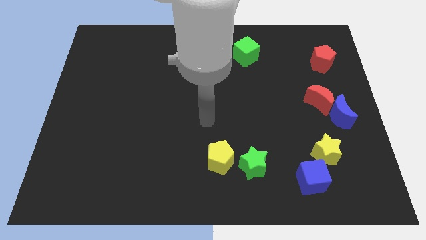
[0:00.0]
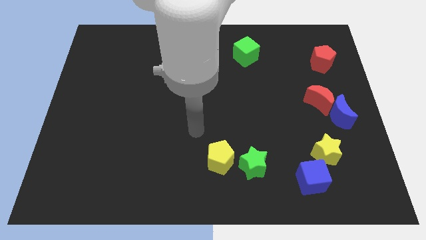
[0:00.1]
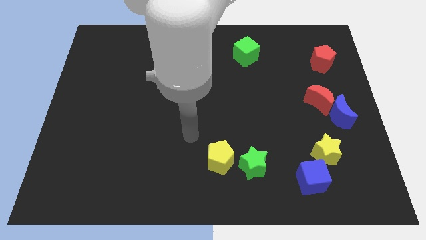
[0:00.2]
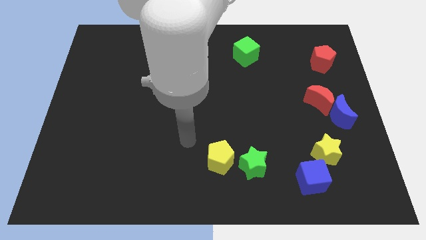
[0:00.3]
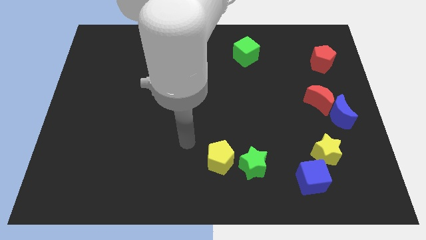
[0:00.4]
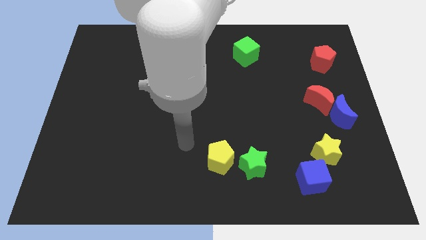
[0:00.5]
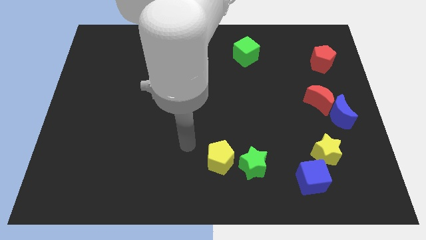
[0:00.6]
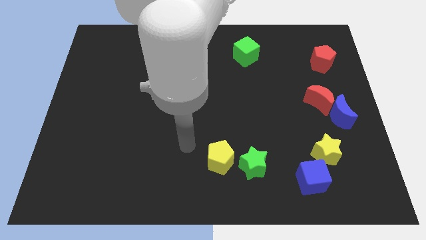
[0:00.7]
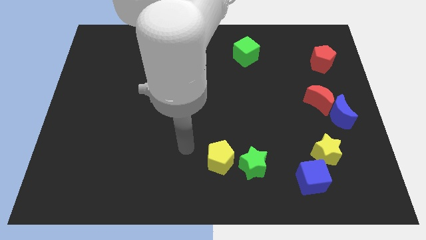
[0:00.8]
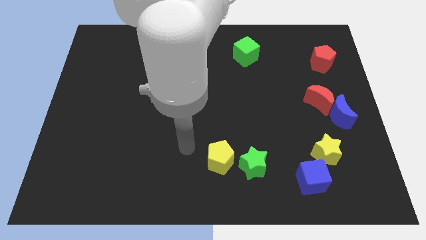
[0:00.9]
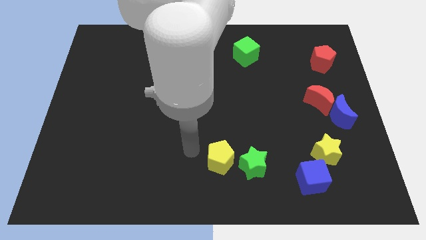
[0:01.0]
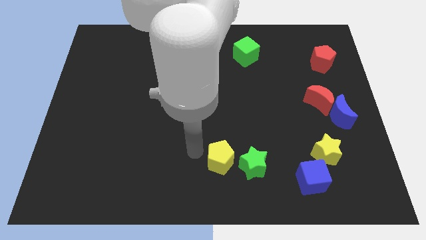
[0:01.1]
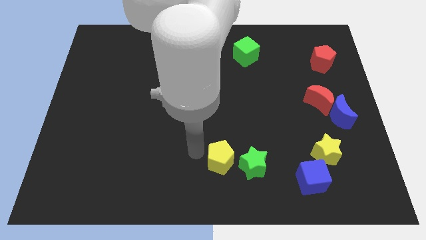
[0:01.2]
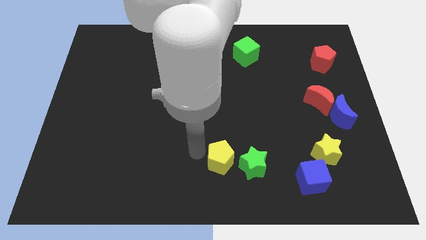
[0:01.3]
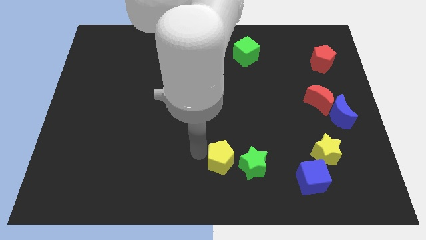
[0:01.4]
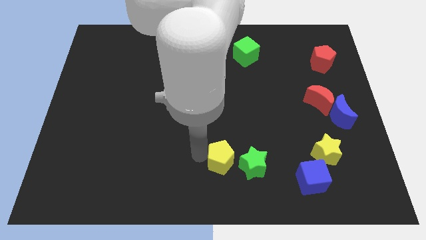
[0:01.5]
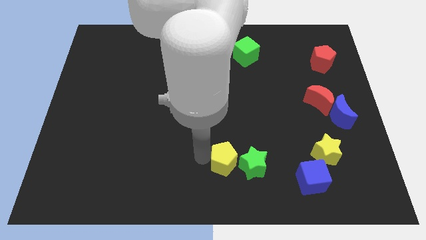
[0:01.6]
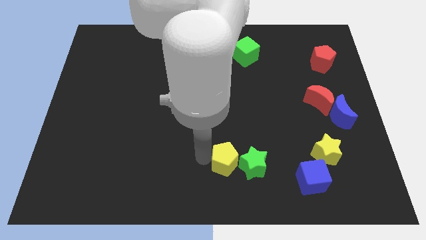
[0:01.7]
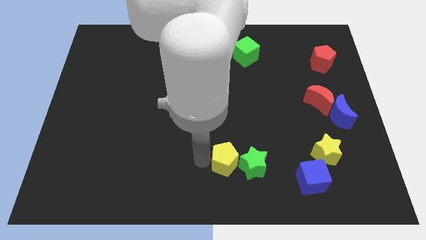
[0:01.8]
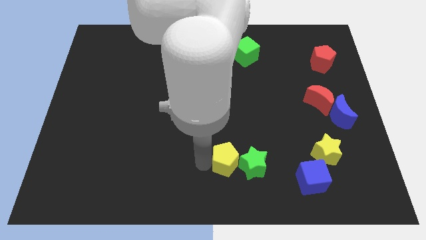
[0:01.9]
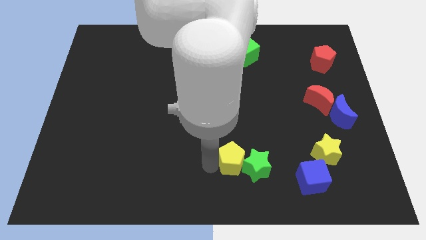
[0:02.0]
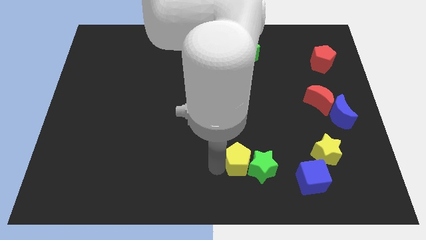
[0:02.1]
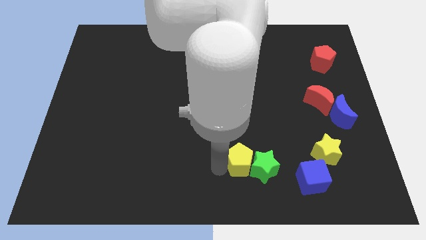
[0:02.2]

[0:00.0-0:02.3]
move your arm and slightly push the yellow pentagon and green star towards right

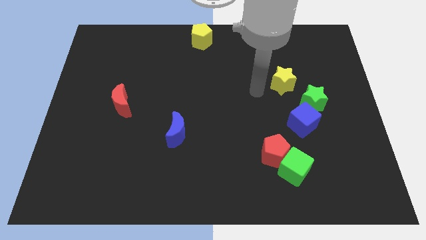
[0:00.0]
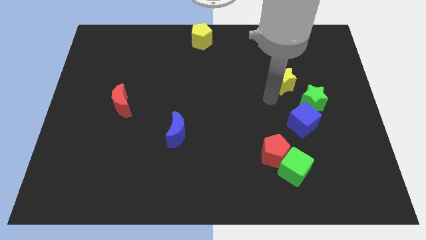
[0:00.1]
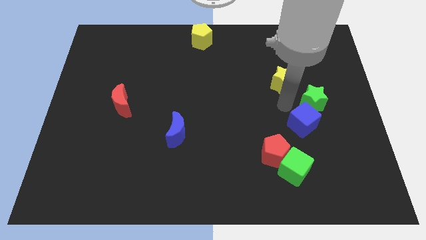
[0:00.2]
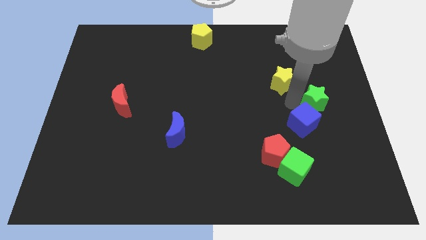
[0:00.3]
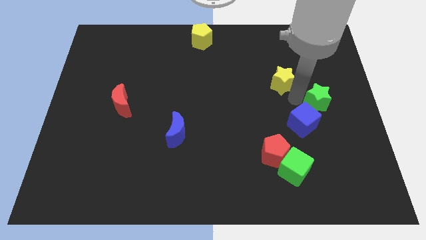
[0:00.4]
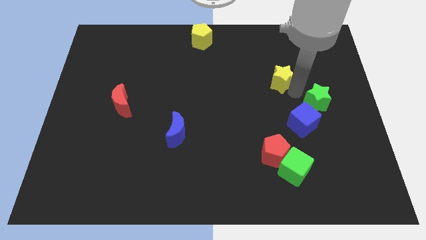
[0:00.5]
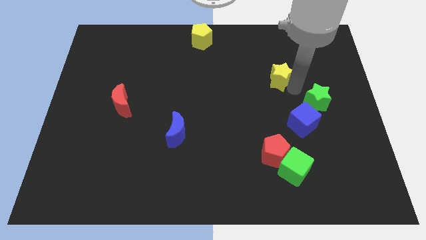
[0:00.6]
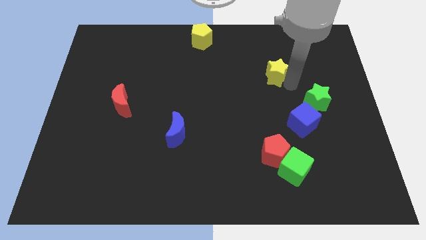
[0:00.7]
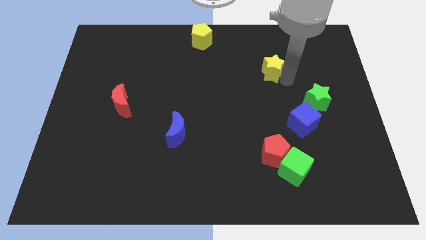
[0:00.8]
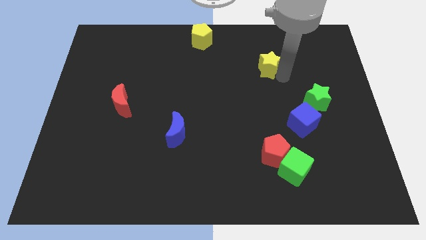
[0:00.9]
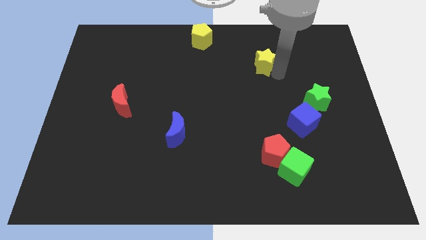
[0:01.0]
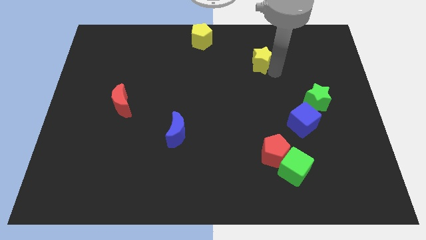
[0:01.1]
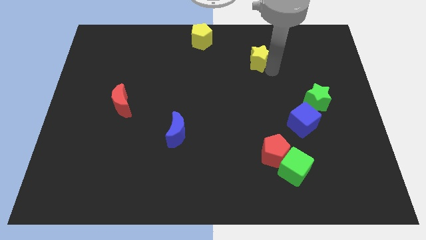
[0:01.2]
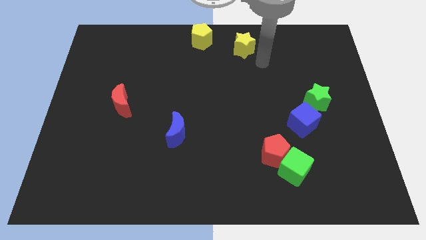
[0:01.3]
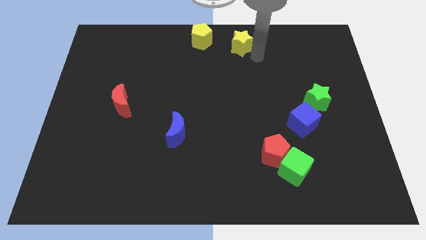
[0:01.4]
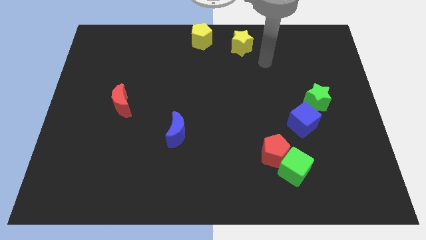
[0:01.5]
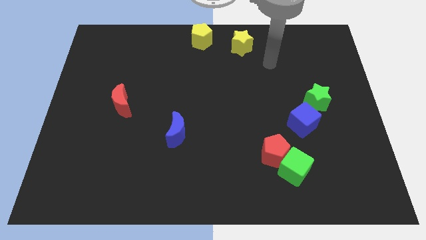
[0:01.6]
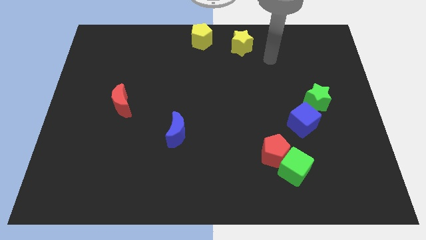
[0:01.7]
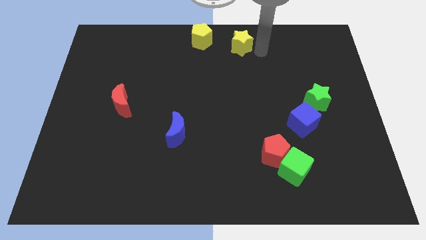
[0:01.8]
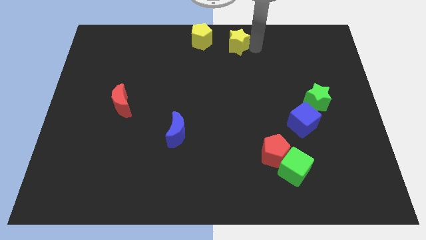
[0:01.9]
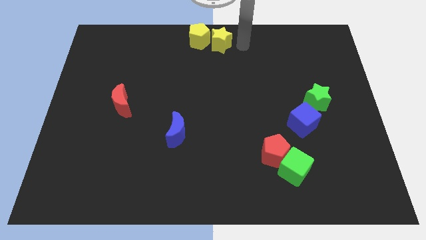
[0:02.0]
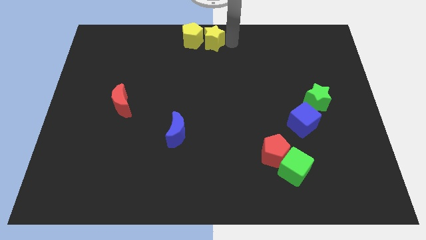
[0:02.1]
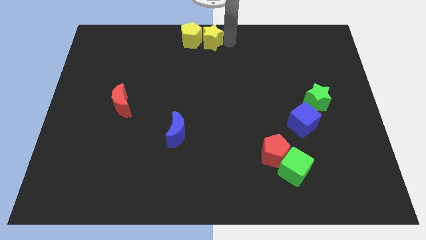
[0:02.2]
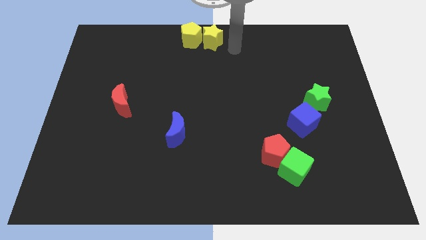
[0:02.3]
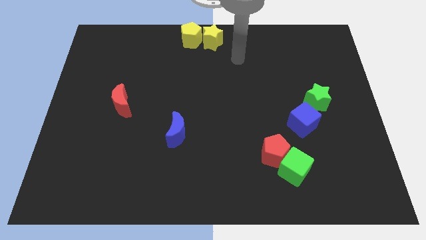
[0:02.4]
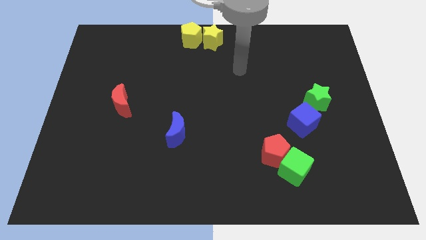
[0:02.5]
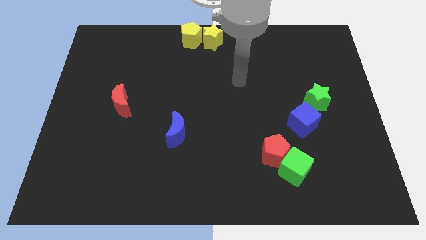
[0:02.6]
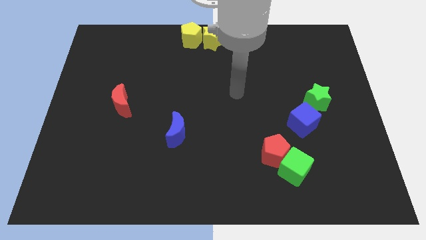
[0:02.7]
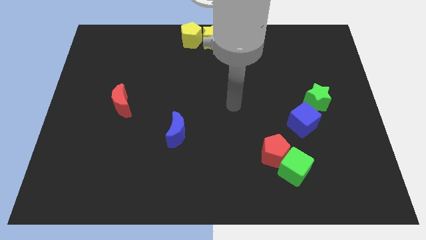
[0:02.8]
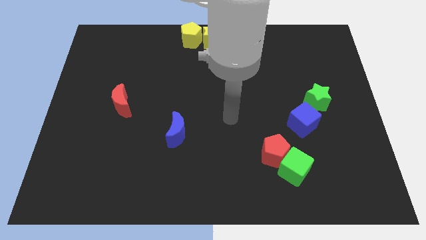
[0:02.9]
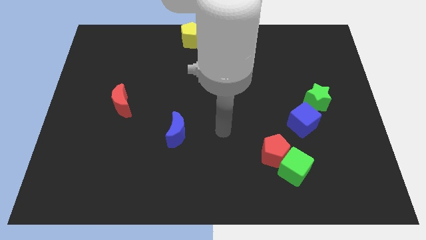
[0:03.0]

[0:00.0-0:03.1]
slide yellow star to the top center

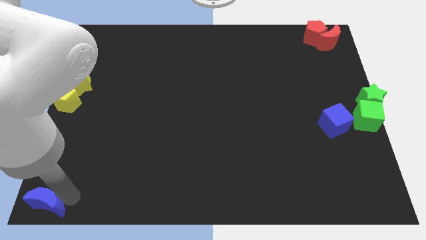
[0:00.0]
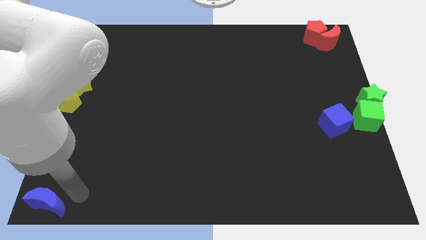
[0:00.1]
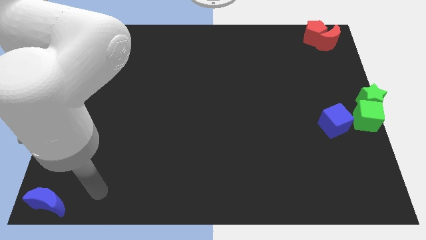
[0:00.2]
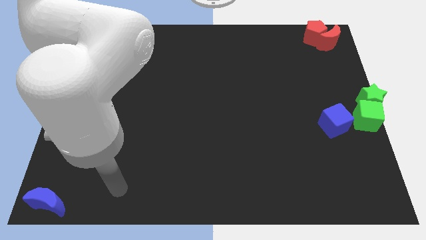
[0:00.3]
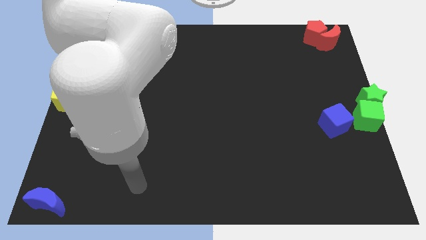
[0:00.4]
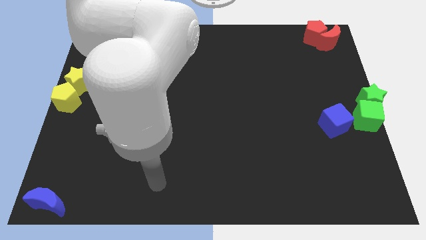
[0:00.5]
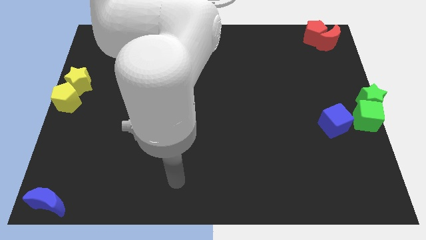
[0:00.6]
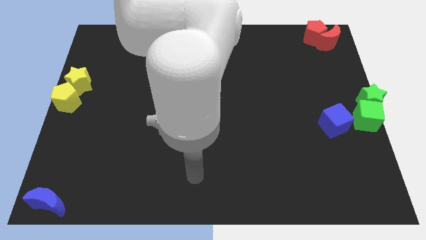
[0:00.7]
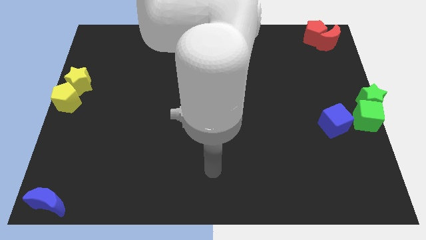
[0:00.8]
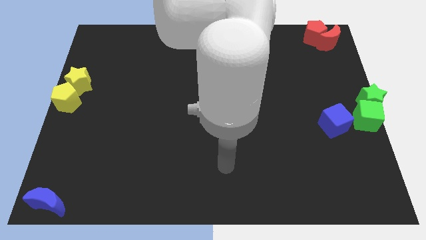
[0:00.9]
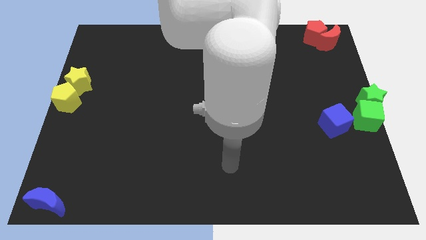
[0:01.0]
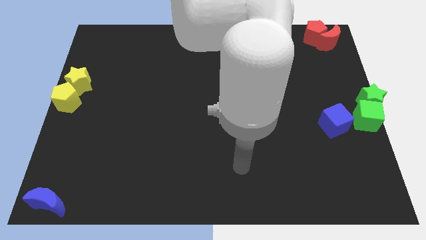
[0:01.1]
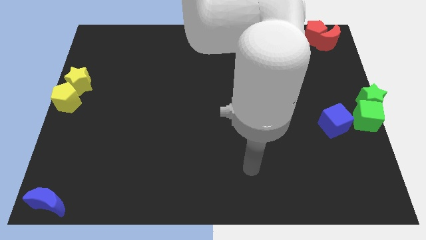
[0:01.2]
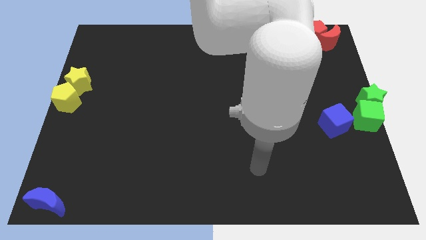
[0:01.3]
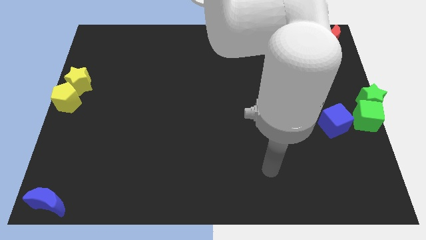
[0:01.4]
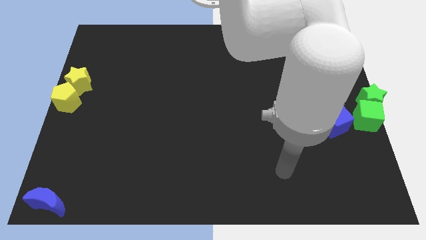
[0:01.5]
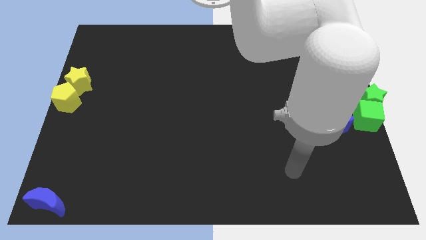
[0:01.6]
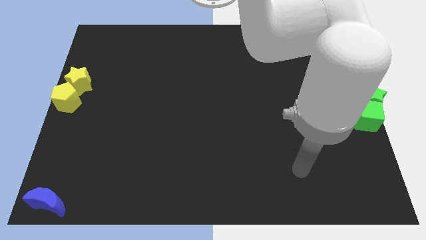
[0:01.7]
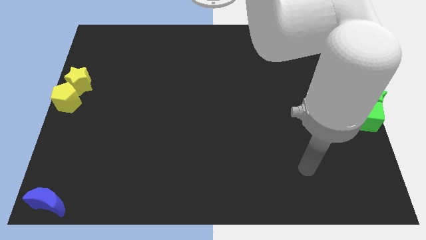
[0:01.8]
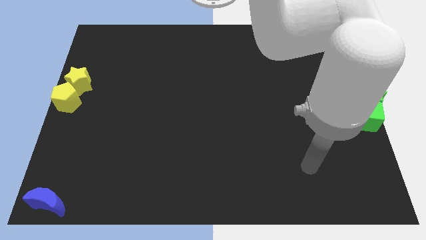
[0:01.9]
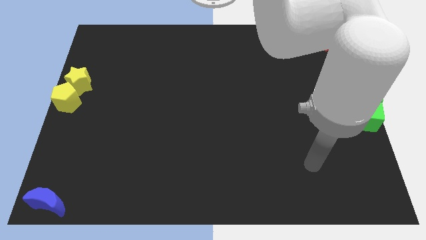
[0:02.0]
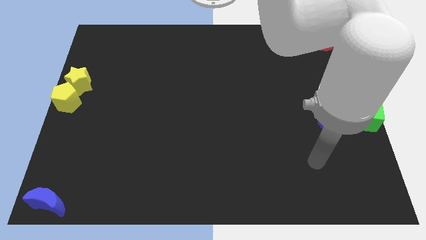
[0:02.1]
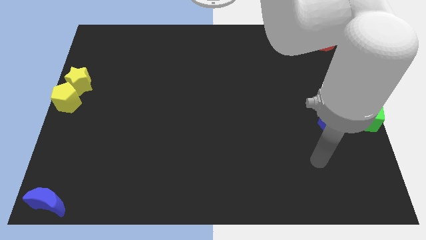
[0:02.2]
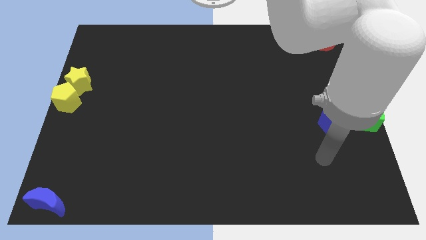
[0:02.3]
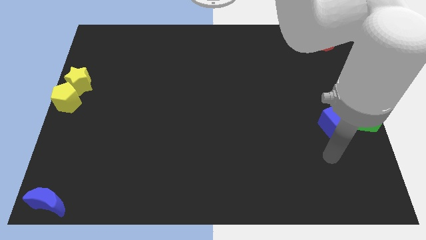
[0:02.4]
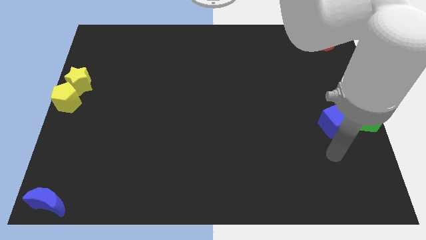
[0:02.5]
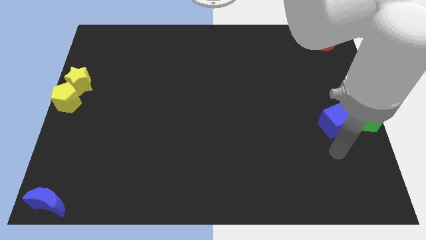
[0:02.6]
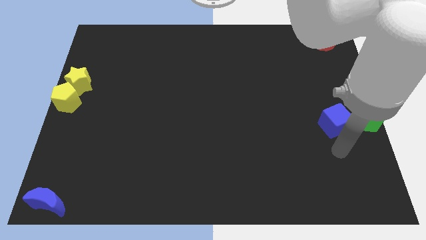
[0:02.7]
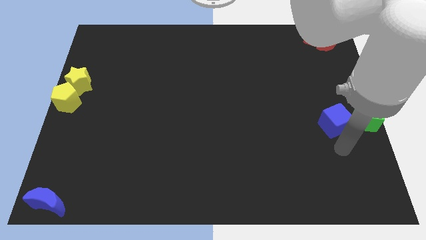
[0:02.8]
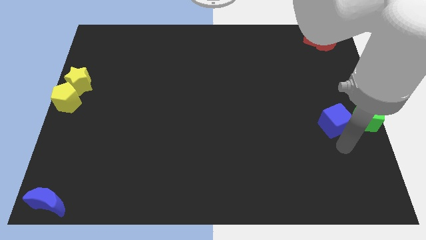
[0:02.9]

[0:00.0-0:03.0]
move the arm below the blue cube

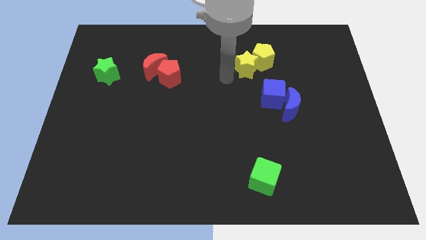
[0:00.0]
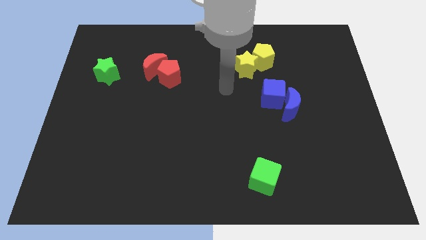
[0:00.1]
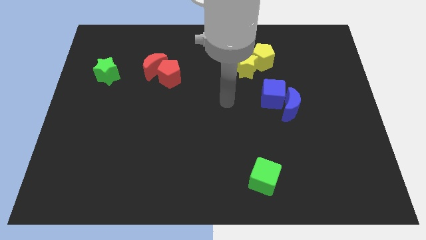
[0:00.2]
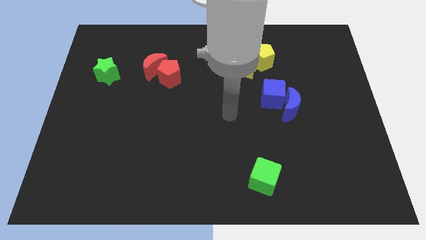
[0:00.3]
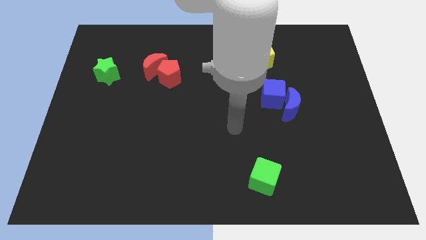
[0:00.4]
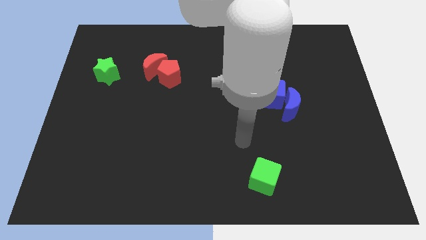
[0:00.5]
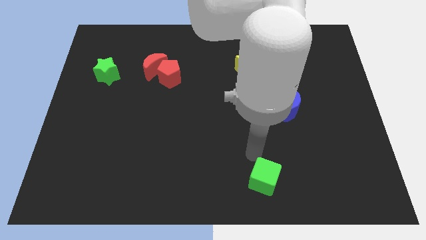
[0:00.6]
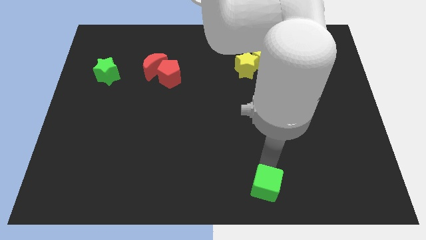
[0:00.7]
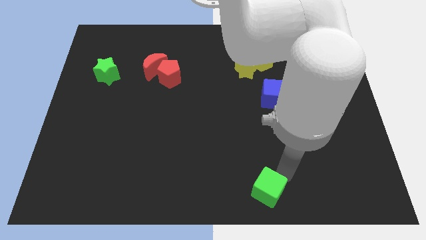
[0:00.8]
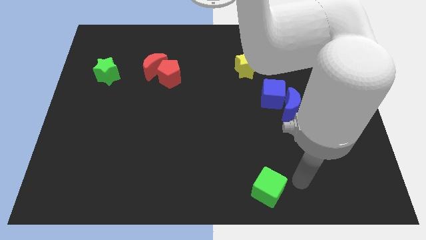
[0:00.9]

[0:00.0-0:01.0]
slightly push the green cube towards the bottom side of the board
